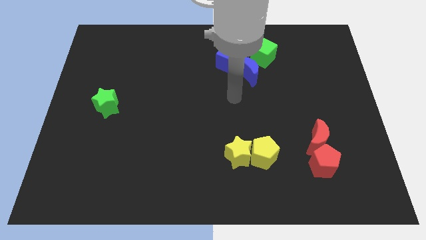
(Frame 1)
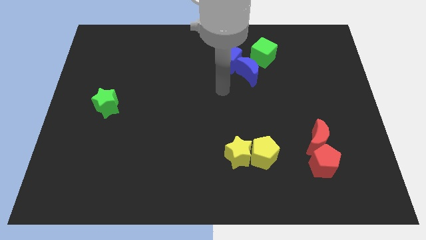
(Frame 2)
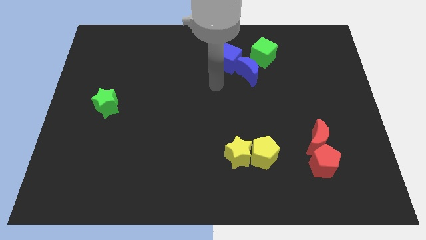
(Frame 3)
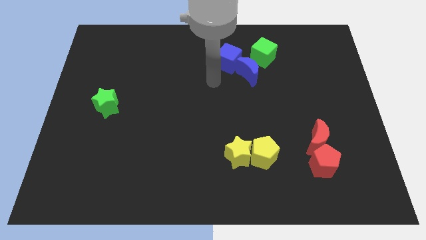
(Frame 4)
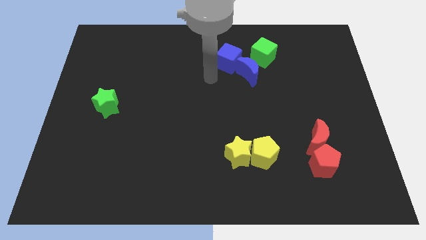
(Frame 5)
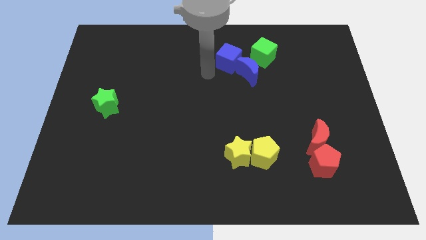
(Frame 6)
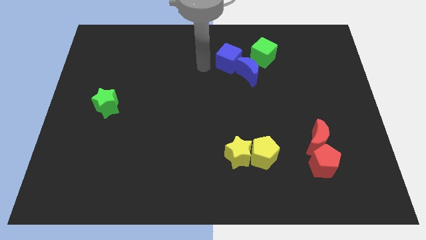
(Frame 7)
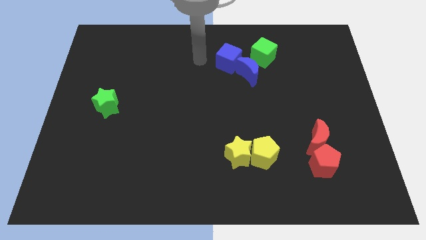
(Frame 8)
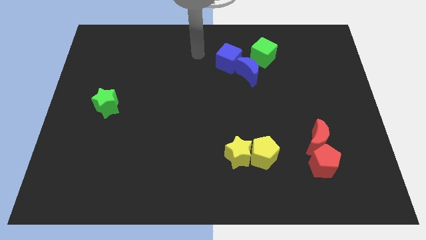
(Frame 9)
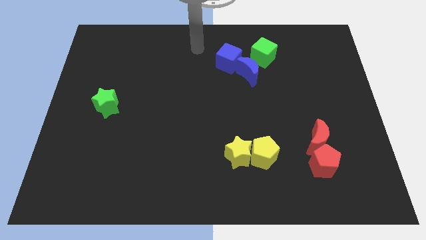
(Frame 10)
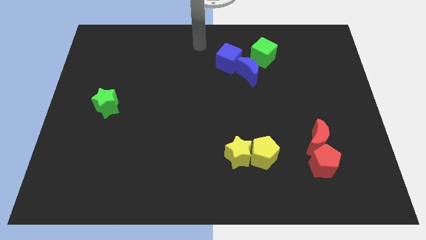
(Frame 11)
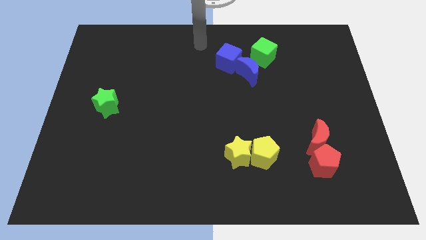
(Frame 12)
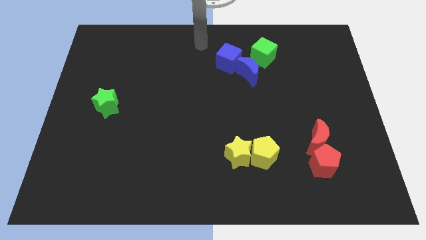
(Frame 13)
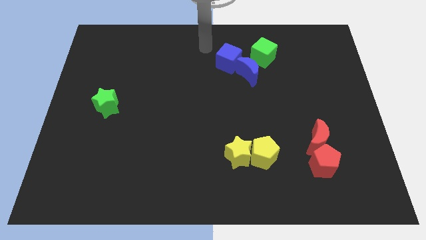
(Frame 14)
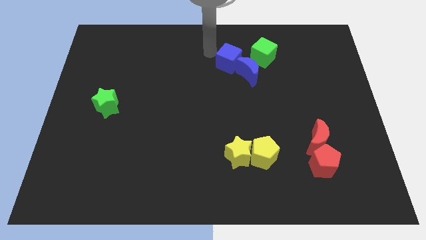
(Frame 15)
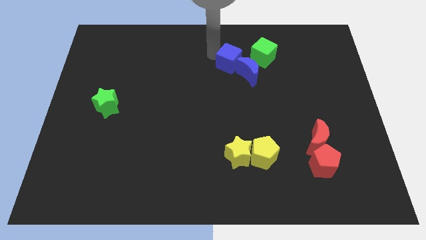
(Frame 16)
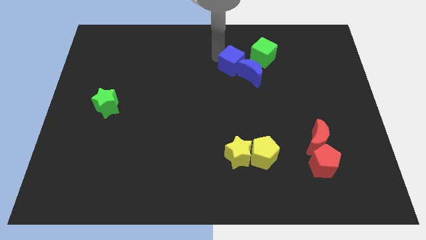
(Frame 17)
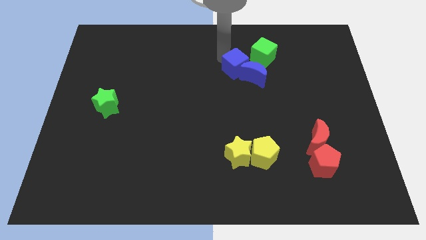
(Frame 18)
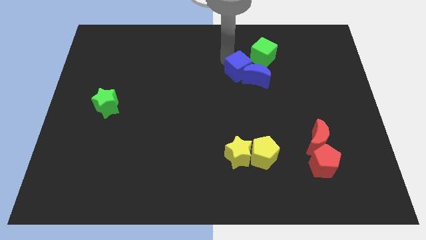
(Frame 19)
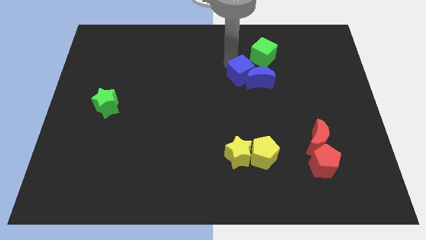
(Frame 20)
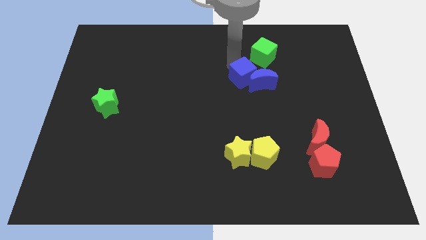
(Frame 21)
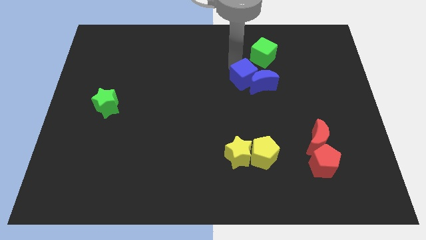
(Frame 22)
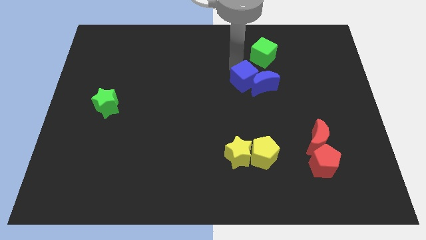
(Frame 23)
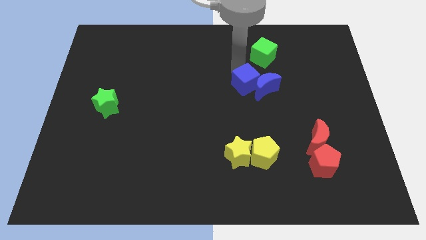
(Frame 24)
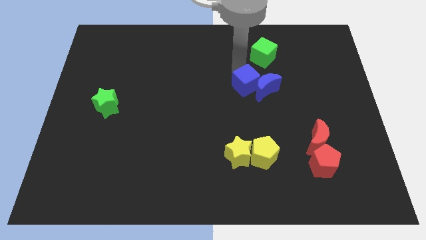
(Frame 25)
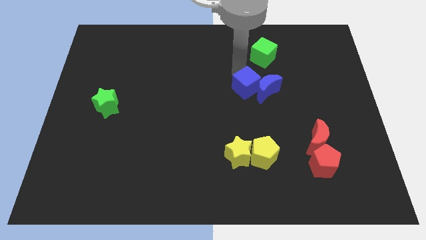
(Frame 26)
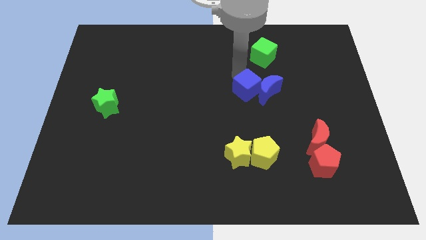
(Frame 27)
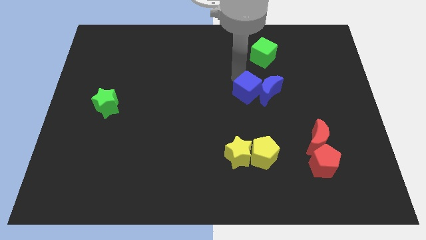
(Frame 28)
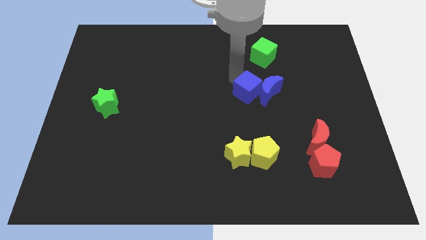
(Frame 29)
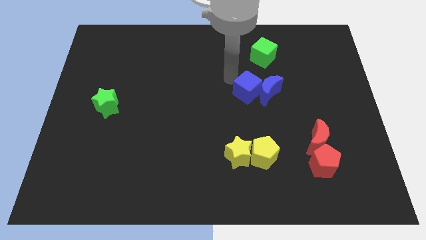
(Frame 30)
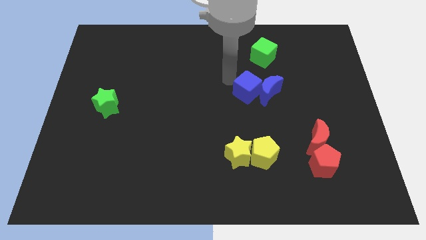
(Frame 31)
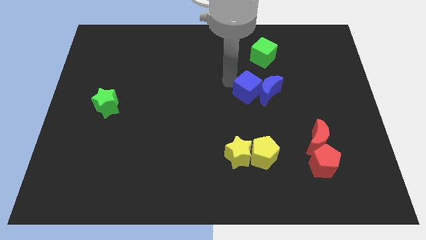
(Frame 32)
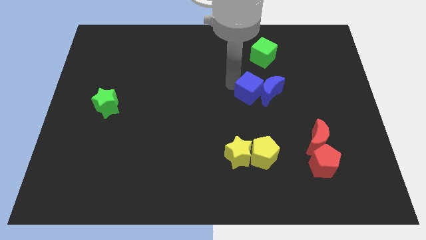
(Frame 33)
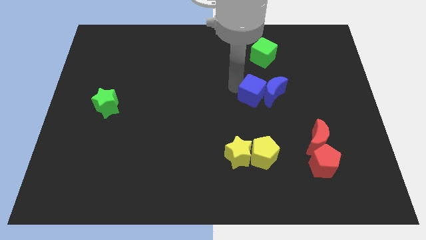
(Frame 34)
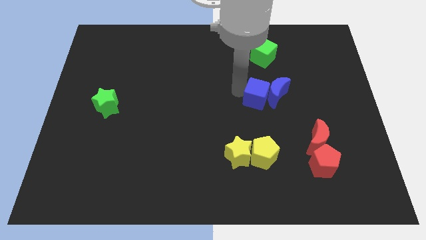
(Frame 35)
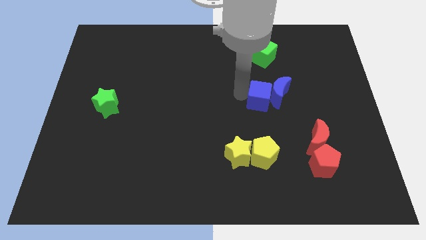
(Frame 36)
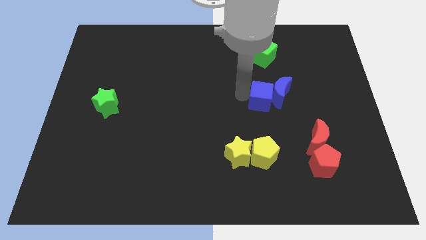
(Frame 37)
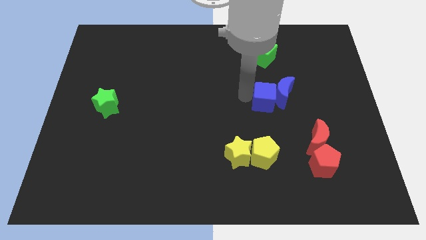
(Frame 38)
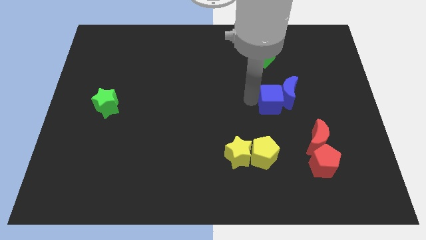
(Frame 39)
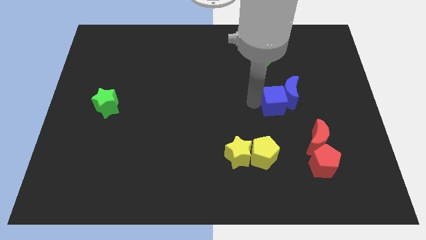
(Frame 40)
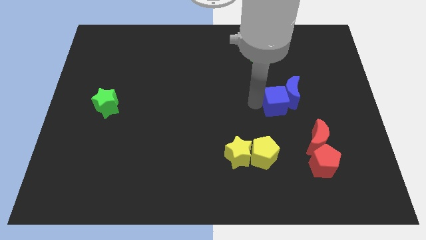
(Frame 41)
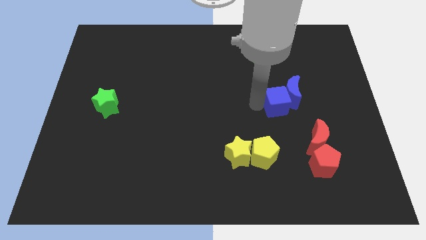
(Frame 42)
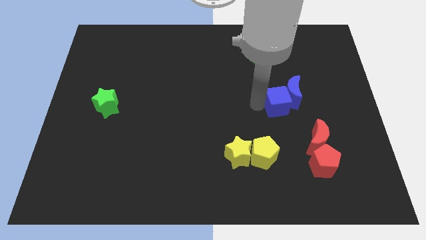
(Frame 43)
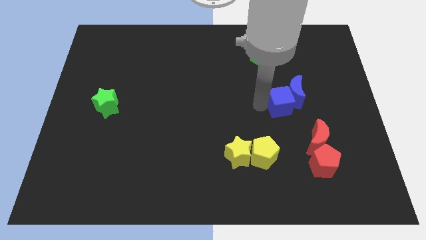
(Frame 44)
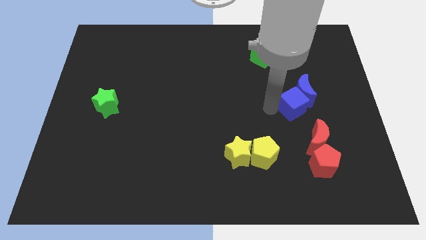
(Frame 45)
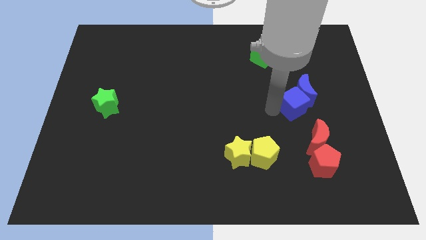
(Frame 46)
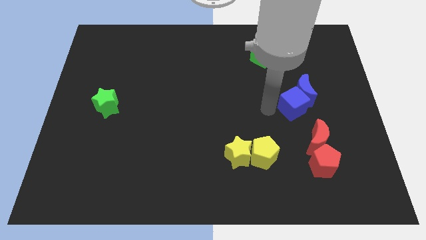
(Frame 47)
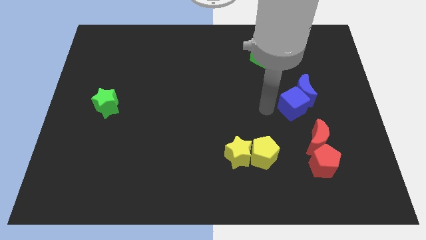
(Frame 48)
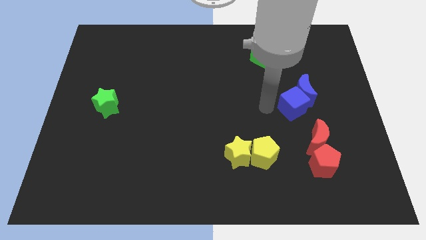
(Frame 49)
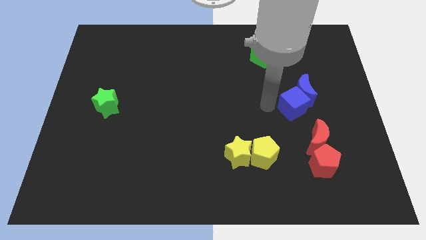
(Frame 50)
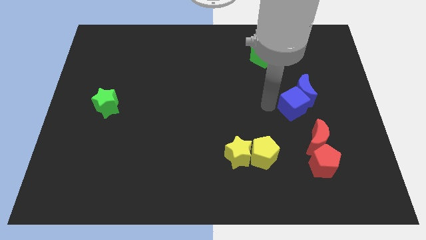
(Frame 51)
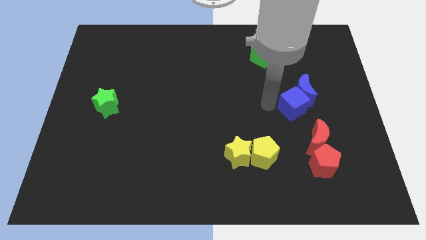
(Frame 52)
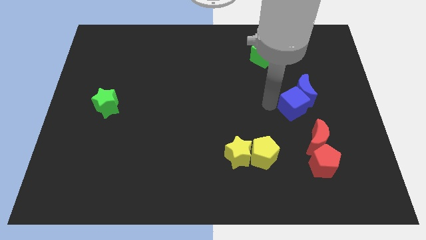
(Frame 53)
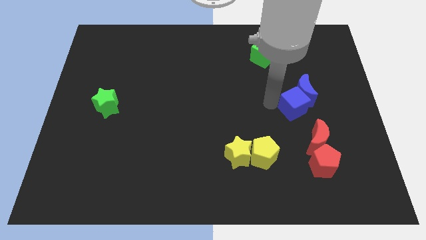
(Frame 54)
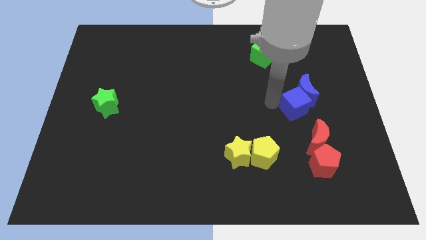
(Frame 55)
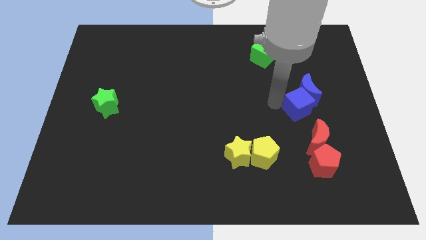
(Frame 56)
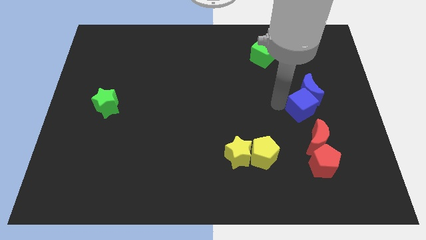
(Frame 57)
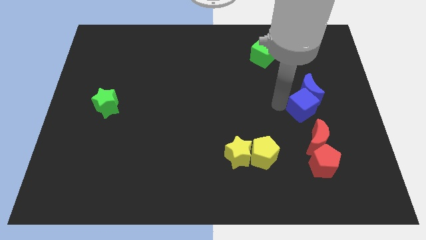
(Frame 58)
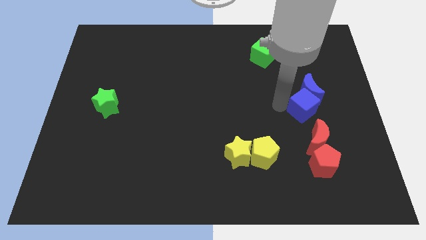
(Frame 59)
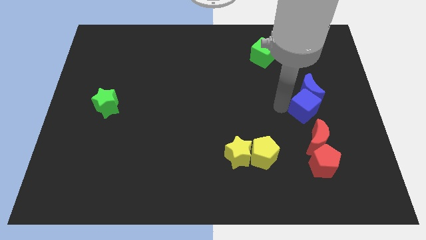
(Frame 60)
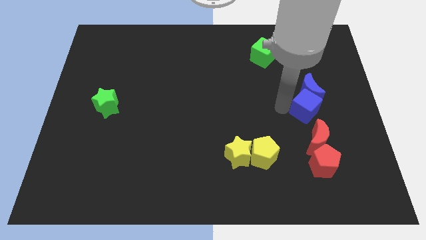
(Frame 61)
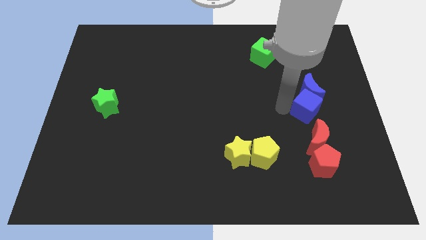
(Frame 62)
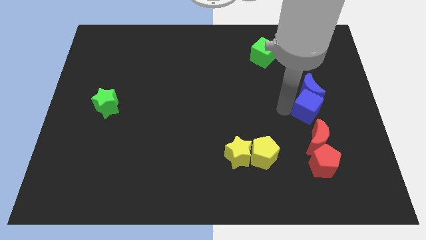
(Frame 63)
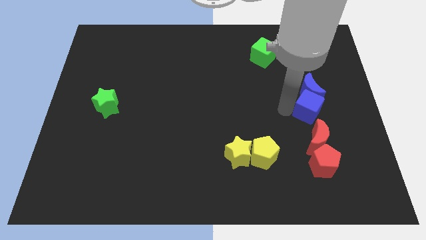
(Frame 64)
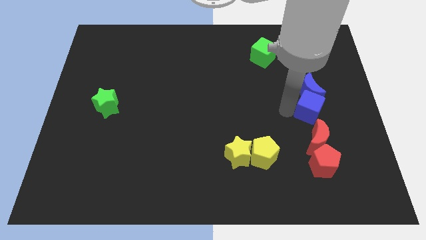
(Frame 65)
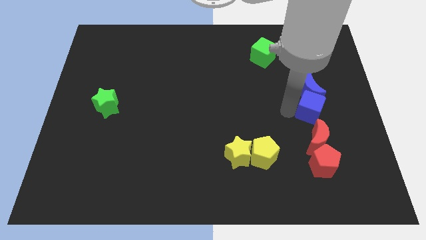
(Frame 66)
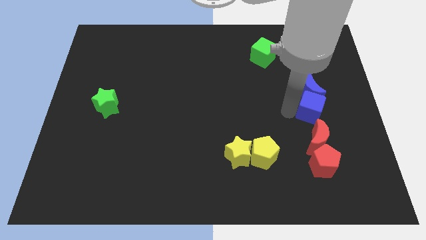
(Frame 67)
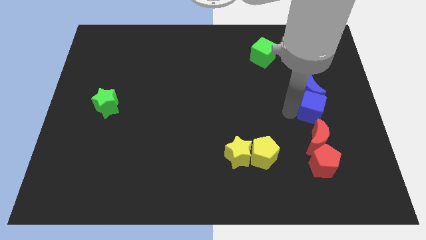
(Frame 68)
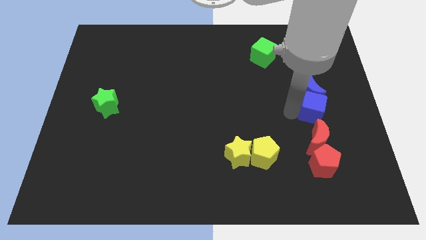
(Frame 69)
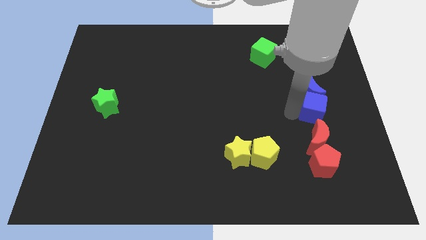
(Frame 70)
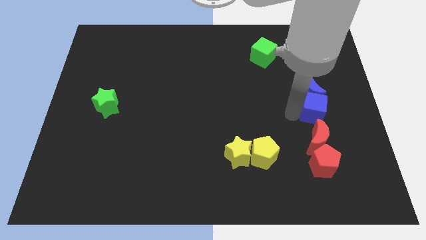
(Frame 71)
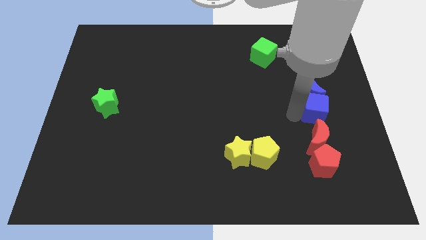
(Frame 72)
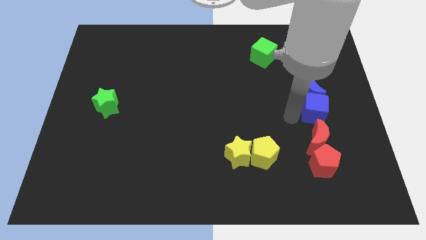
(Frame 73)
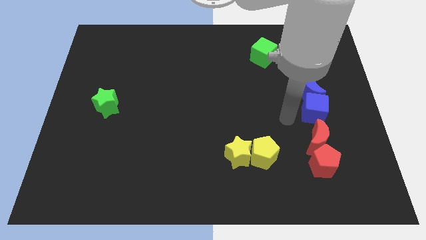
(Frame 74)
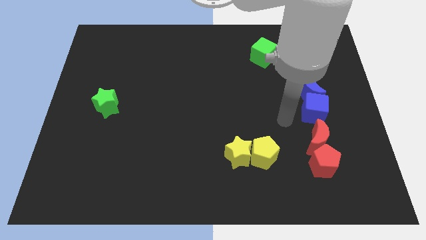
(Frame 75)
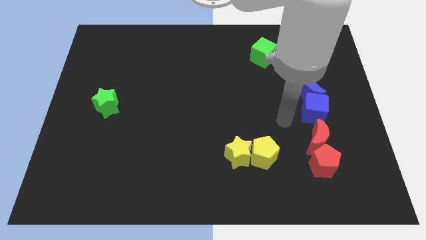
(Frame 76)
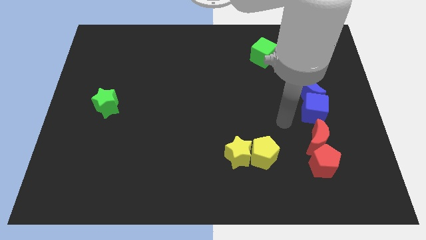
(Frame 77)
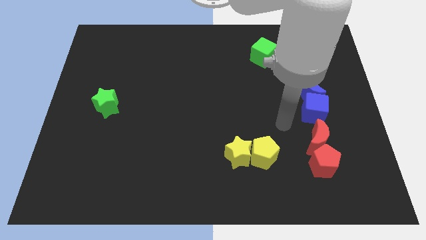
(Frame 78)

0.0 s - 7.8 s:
push the blue crescent with the help of the blue cube above to the red crescent

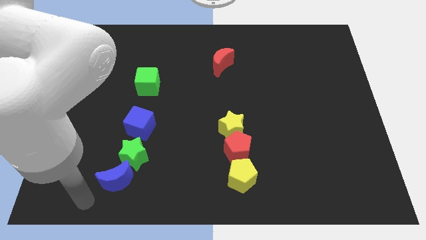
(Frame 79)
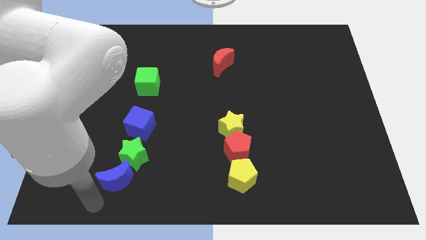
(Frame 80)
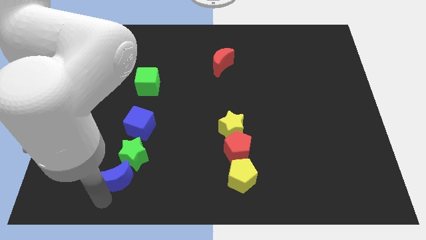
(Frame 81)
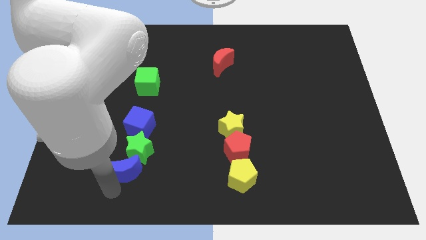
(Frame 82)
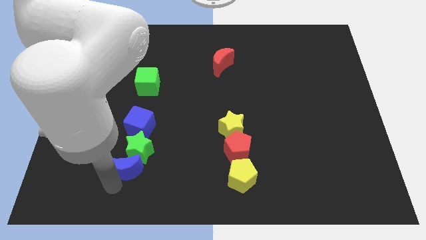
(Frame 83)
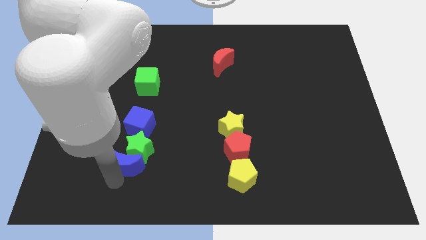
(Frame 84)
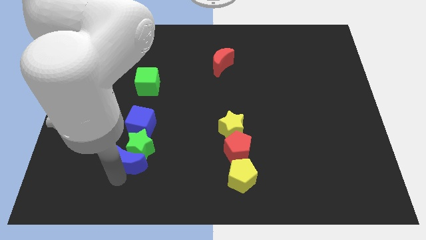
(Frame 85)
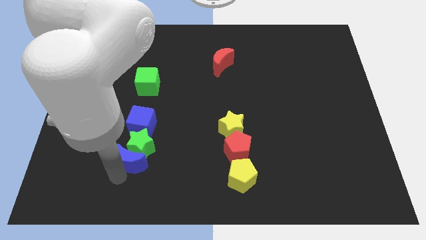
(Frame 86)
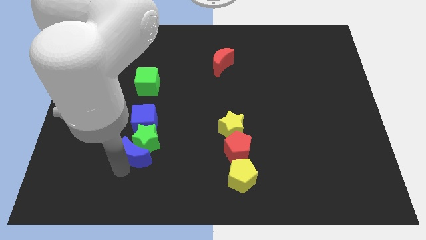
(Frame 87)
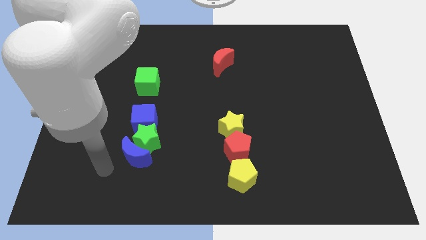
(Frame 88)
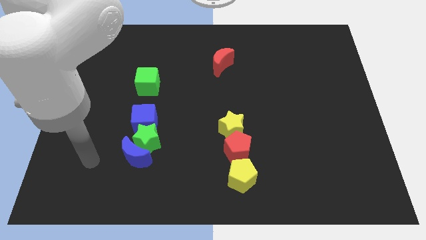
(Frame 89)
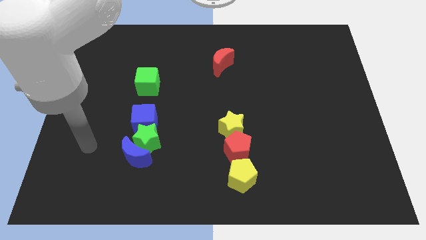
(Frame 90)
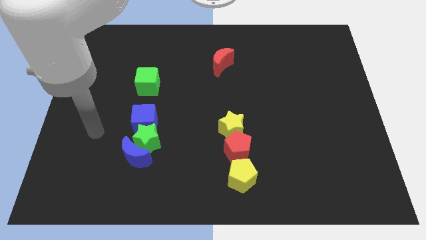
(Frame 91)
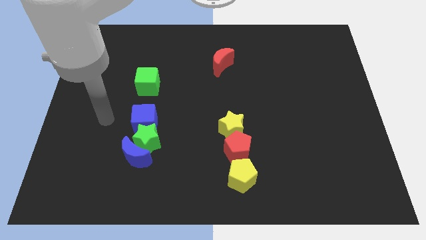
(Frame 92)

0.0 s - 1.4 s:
push the blue blocks and green star towards the green cube
